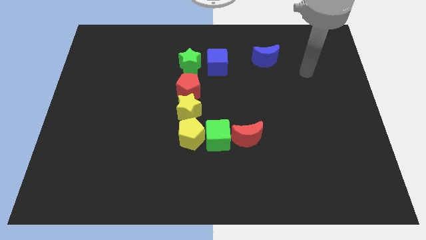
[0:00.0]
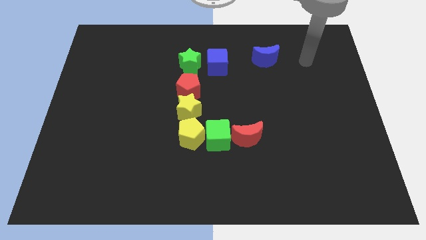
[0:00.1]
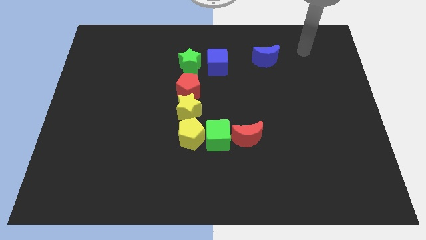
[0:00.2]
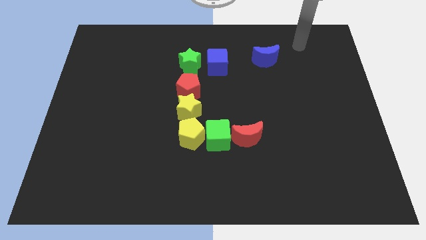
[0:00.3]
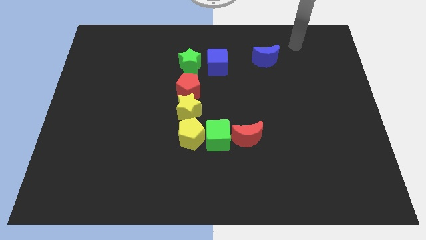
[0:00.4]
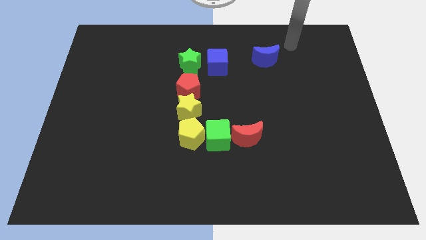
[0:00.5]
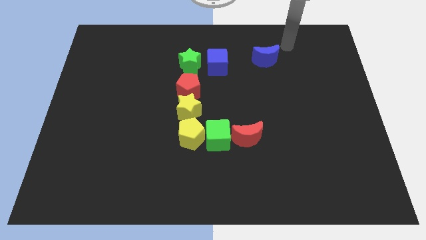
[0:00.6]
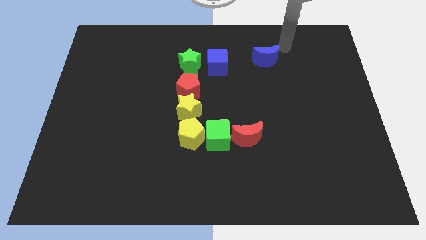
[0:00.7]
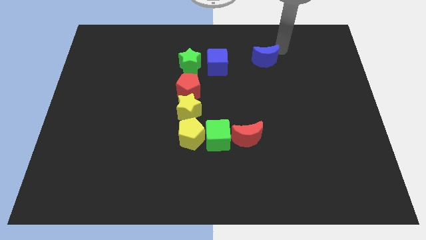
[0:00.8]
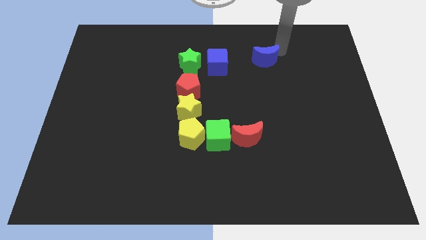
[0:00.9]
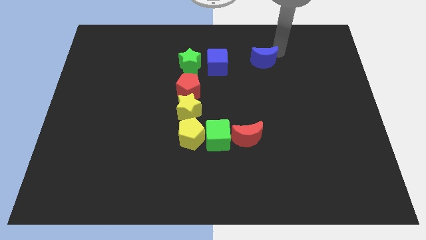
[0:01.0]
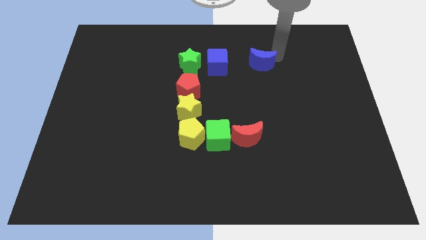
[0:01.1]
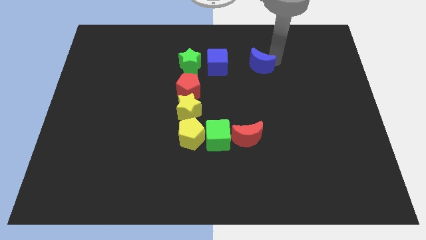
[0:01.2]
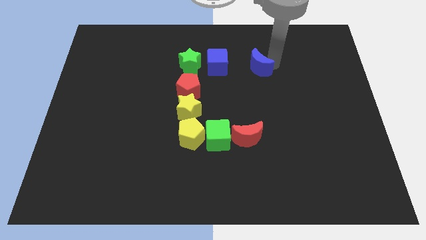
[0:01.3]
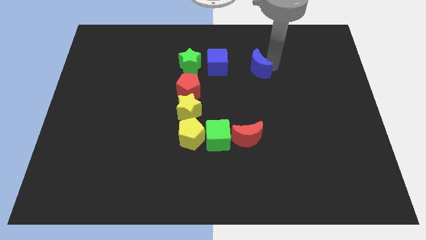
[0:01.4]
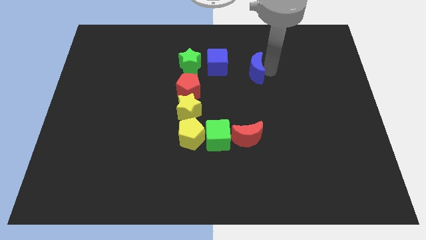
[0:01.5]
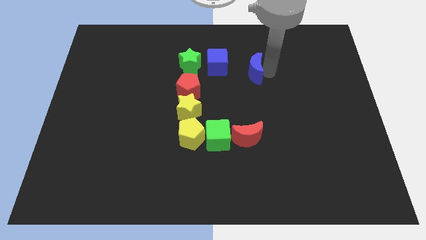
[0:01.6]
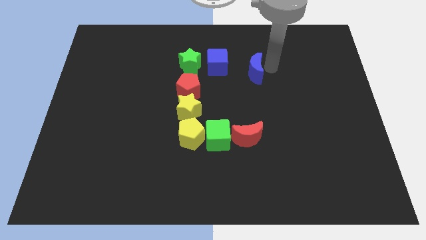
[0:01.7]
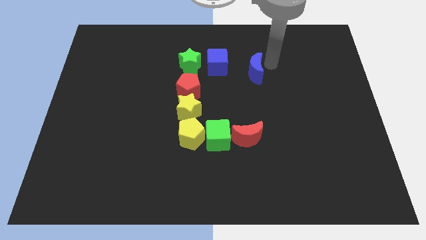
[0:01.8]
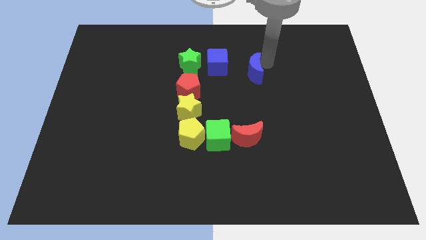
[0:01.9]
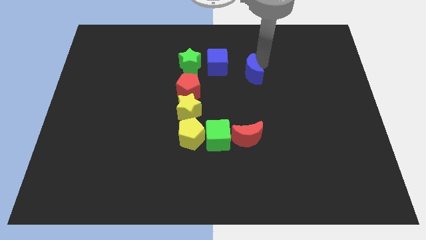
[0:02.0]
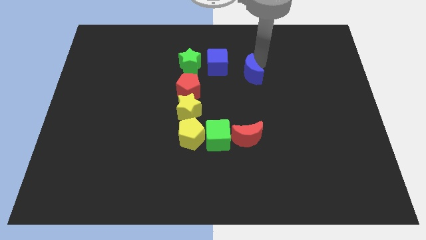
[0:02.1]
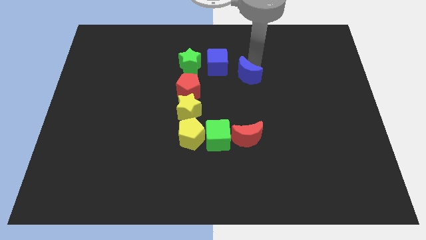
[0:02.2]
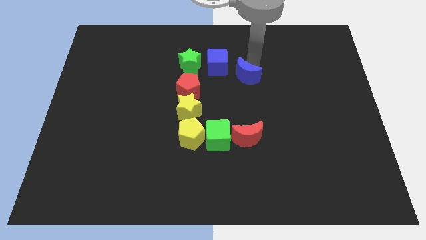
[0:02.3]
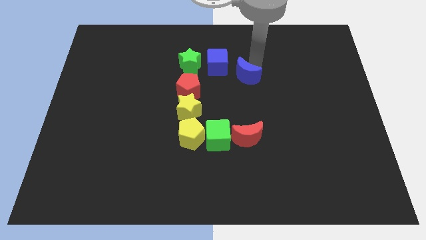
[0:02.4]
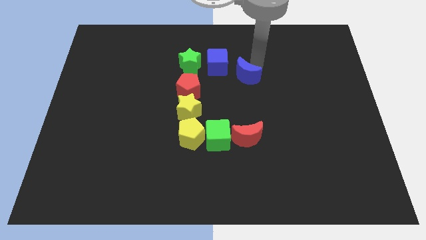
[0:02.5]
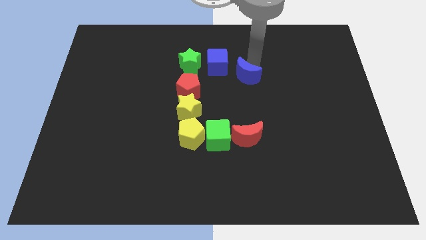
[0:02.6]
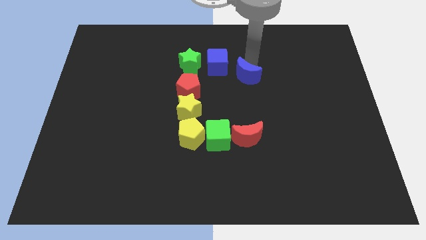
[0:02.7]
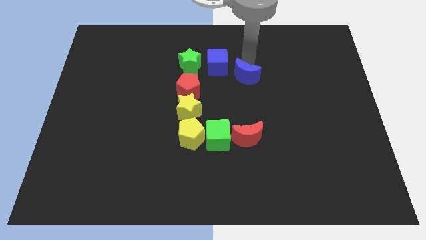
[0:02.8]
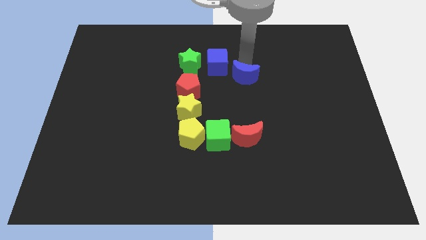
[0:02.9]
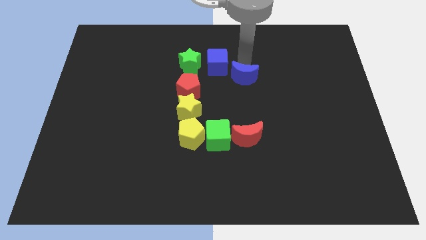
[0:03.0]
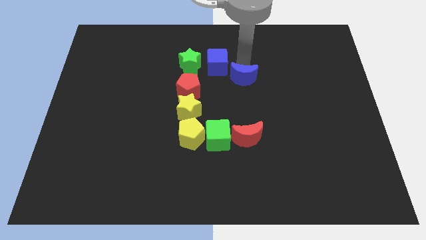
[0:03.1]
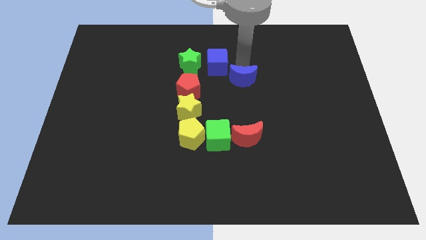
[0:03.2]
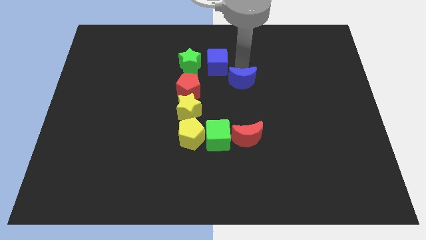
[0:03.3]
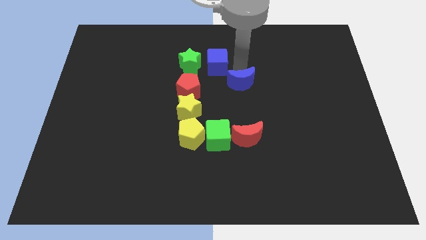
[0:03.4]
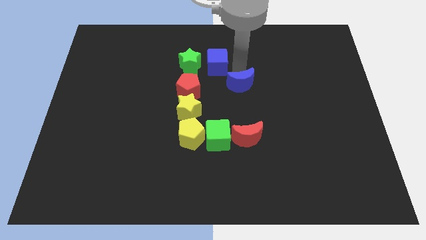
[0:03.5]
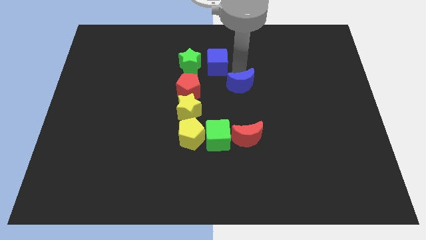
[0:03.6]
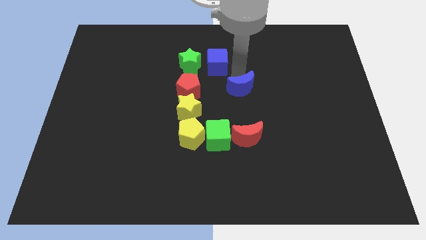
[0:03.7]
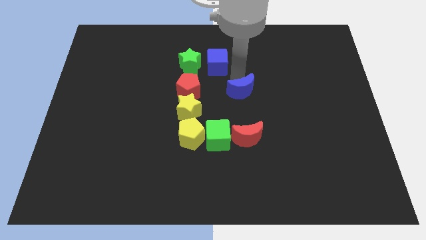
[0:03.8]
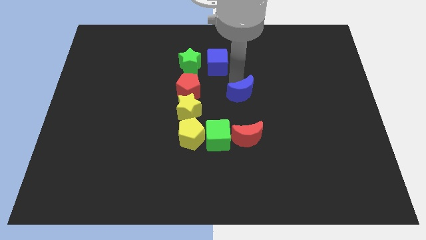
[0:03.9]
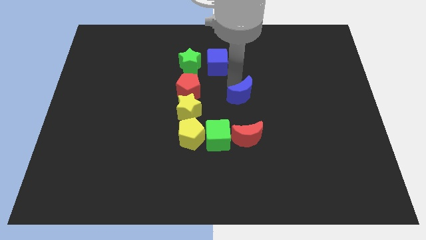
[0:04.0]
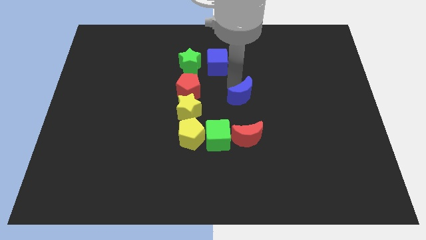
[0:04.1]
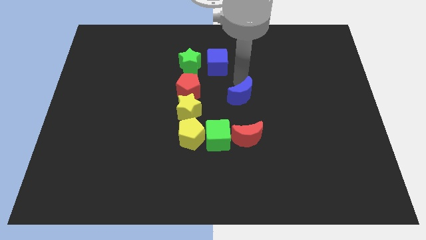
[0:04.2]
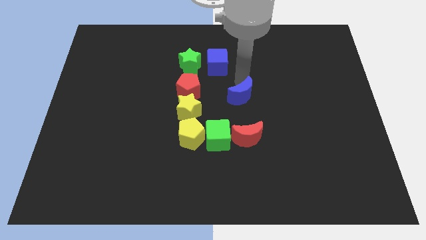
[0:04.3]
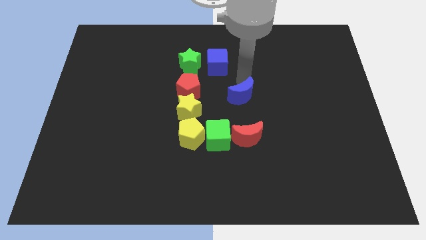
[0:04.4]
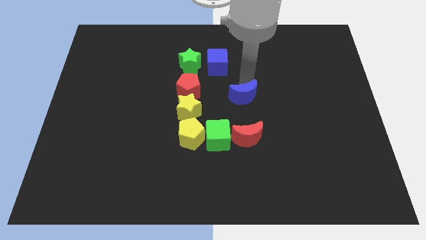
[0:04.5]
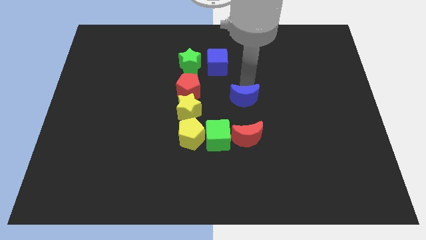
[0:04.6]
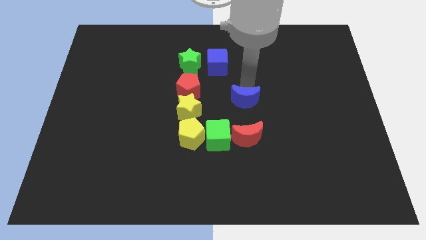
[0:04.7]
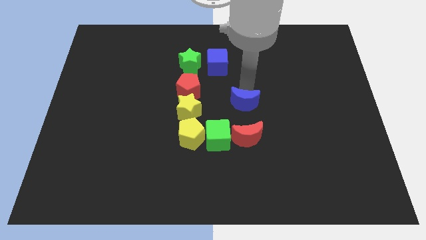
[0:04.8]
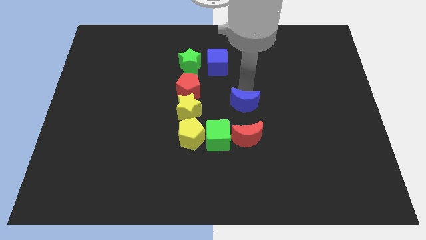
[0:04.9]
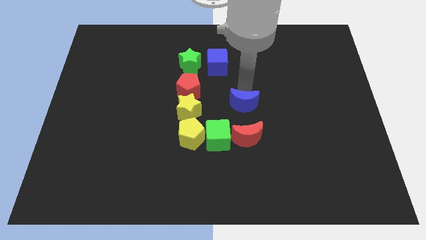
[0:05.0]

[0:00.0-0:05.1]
slide blue moon to the right of yellow star

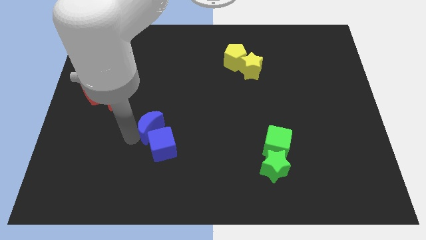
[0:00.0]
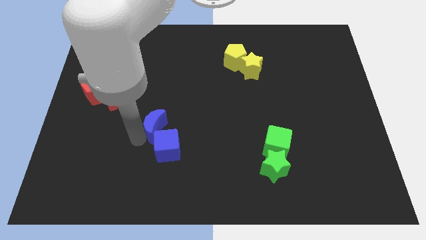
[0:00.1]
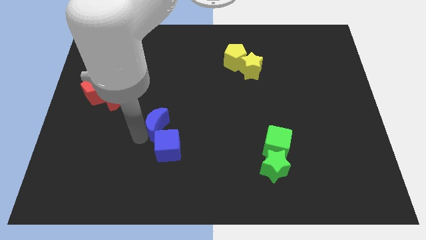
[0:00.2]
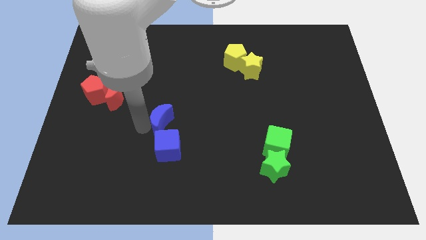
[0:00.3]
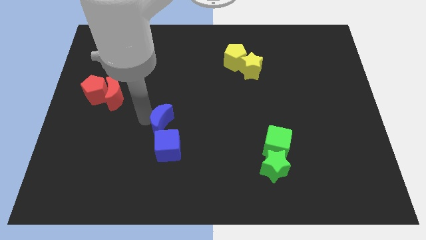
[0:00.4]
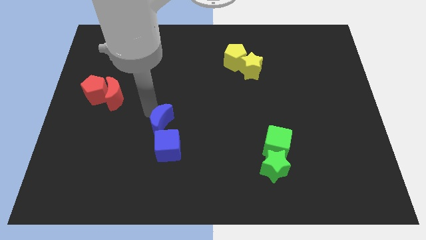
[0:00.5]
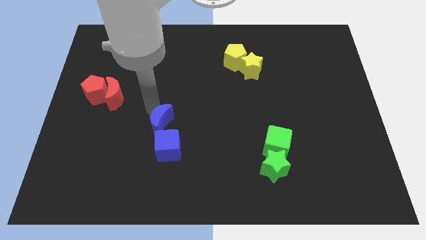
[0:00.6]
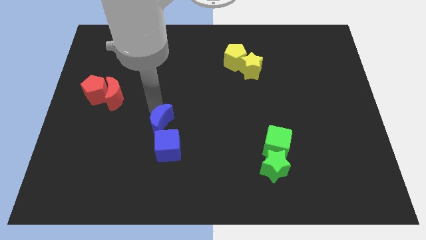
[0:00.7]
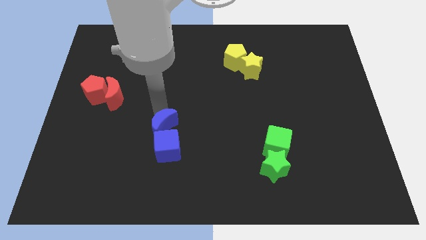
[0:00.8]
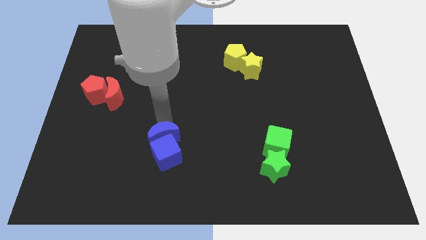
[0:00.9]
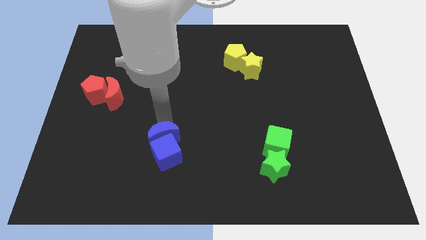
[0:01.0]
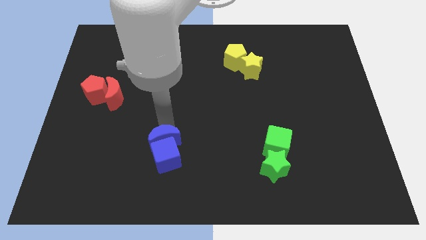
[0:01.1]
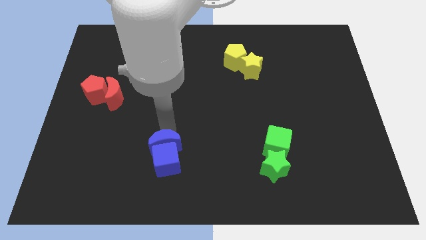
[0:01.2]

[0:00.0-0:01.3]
move the blue blocks slightly to the bottom

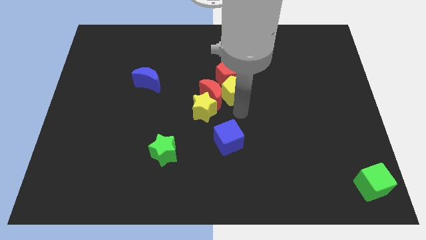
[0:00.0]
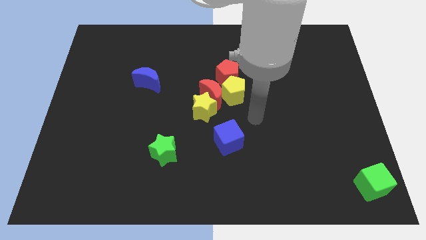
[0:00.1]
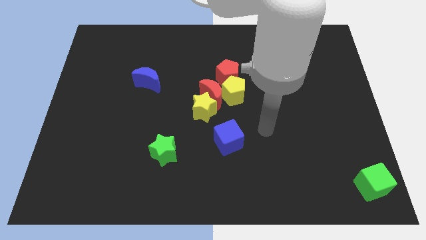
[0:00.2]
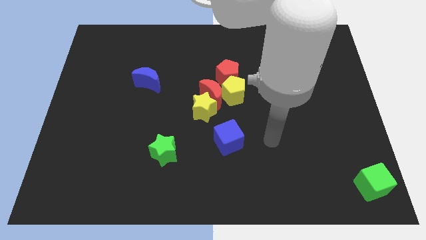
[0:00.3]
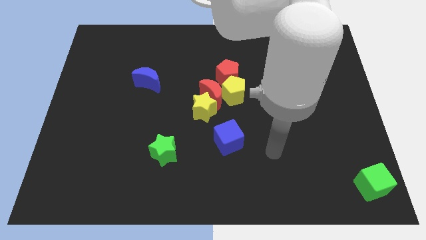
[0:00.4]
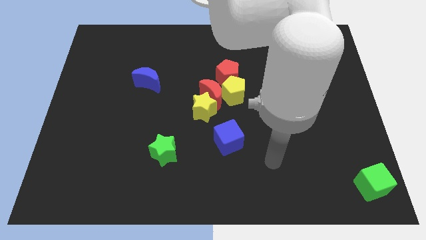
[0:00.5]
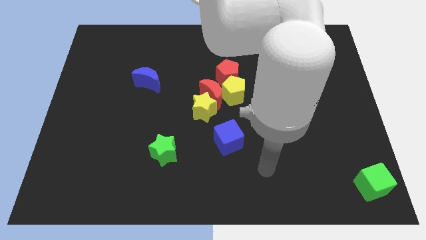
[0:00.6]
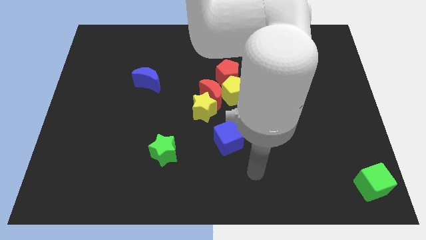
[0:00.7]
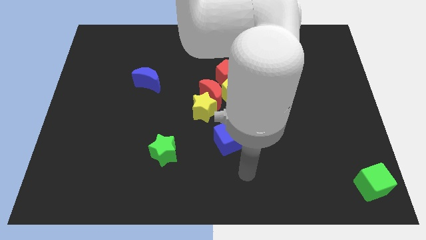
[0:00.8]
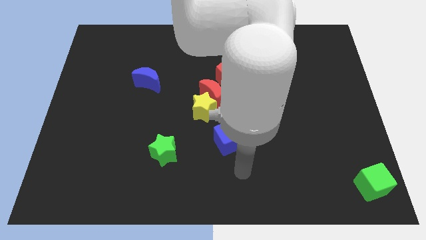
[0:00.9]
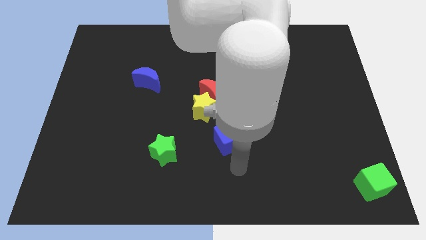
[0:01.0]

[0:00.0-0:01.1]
point your arm at the bottom of blue cube

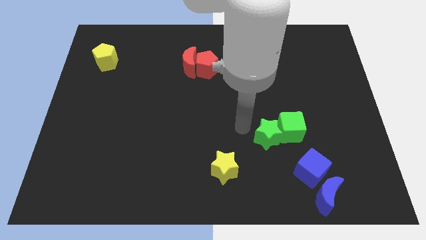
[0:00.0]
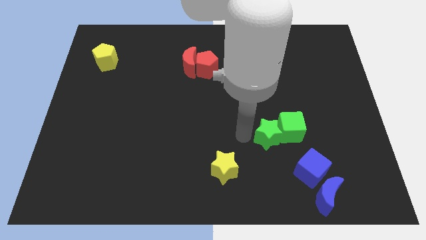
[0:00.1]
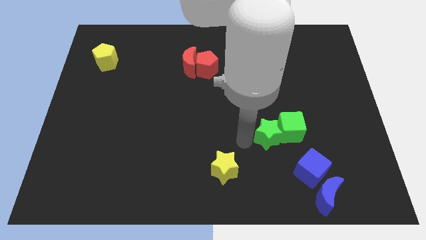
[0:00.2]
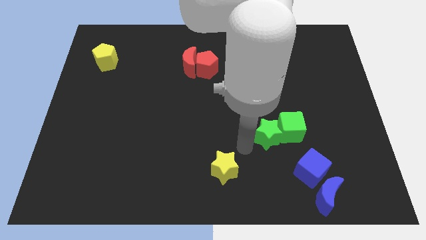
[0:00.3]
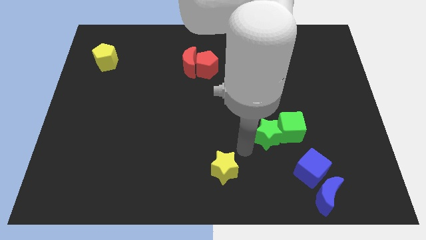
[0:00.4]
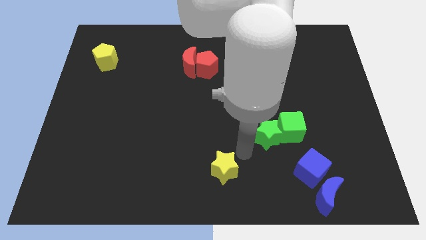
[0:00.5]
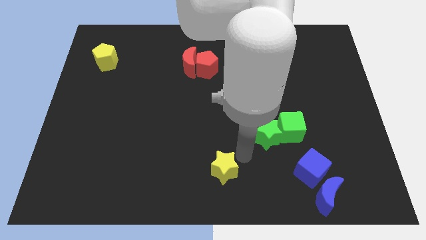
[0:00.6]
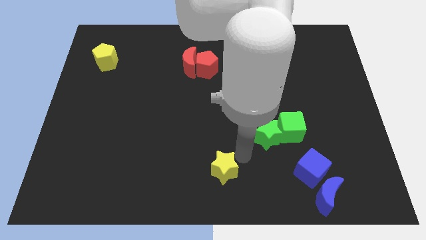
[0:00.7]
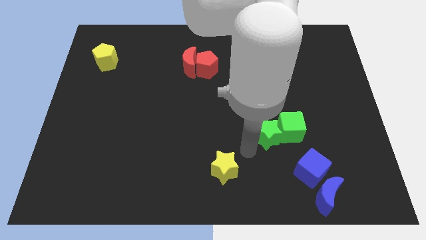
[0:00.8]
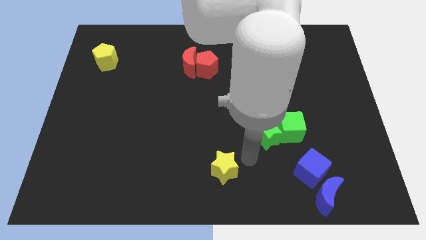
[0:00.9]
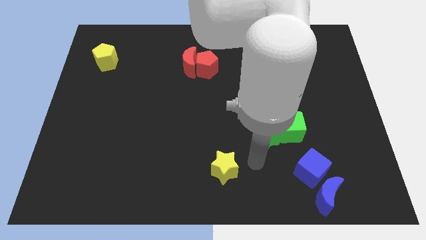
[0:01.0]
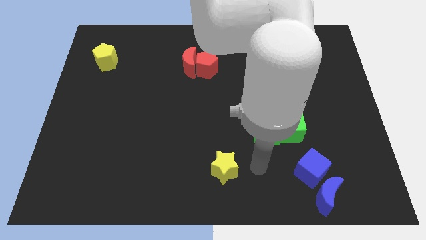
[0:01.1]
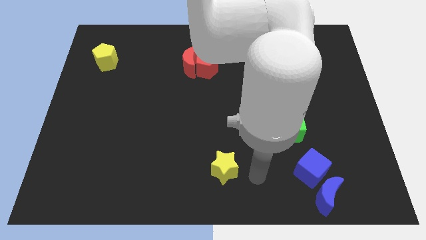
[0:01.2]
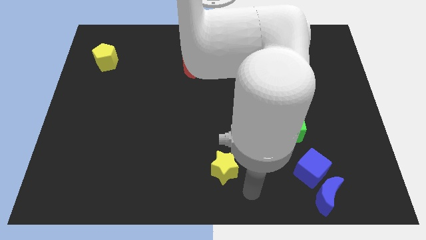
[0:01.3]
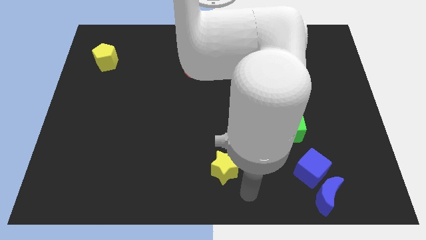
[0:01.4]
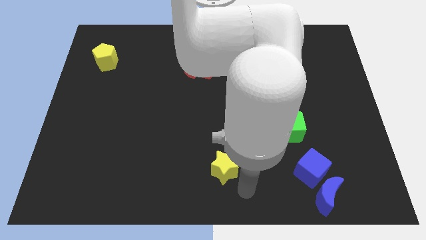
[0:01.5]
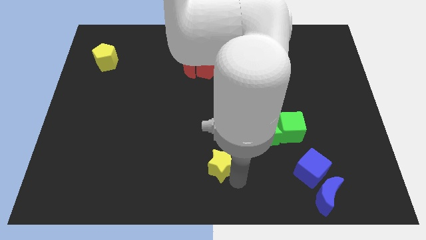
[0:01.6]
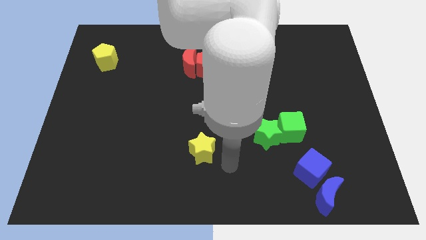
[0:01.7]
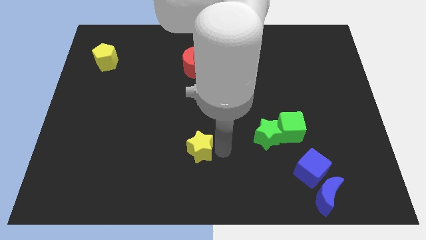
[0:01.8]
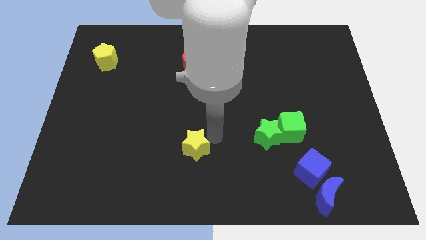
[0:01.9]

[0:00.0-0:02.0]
put the yellow star vertically below the red blocks
